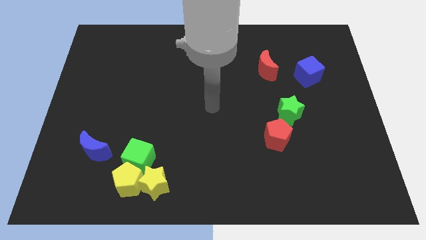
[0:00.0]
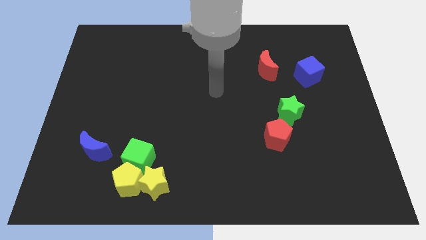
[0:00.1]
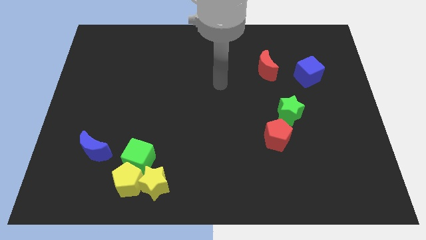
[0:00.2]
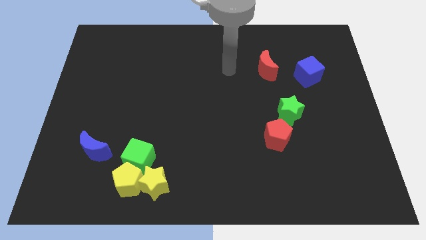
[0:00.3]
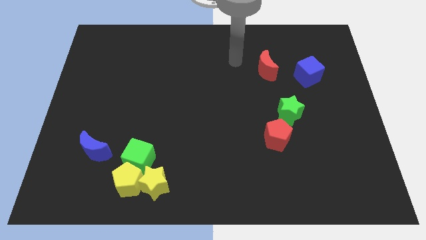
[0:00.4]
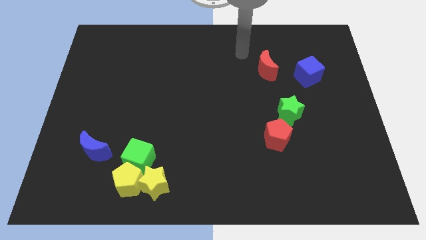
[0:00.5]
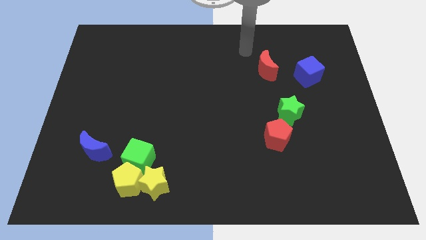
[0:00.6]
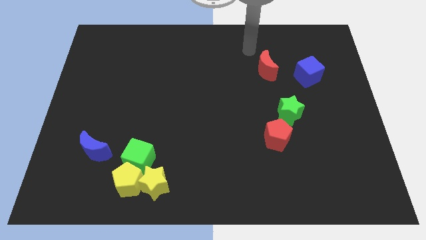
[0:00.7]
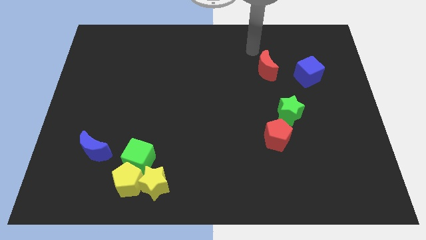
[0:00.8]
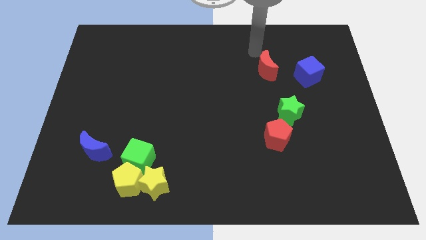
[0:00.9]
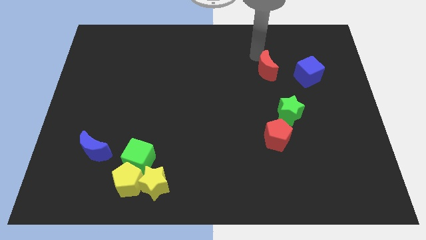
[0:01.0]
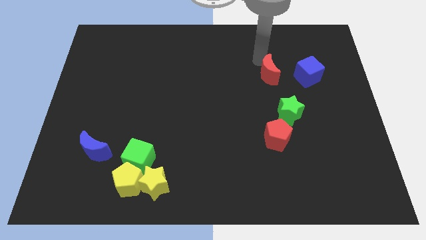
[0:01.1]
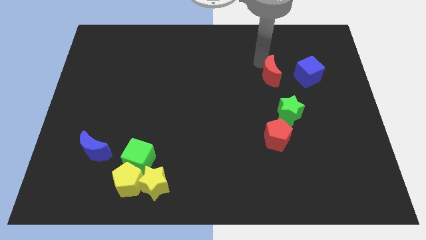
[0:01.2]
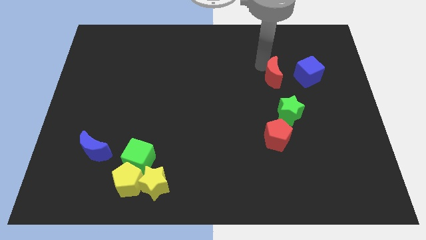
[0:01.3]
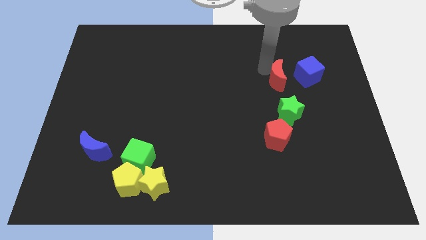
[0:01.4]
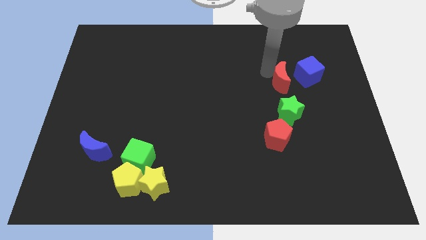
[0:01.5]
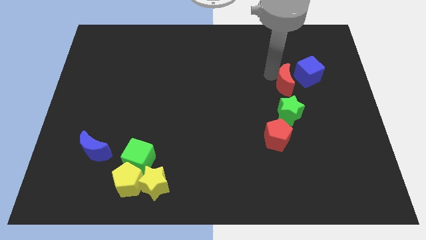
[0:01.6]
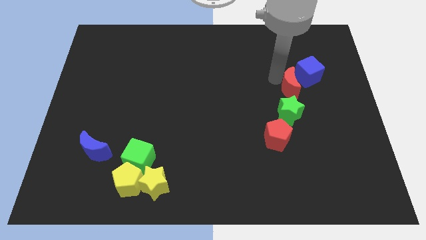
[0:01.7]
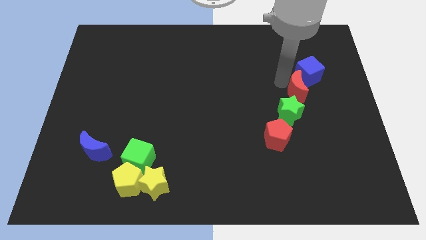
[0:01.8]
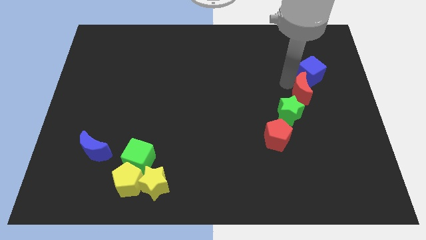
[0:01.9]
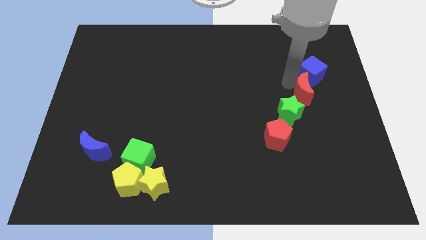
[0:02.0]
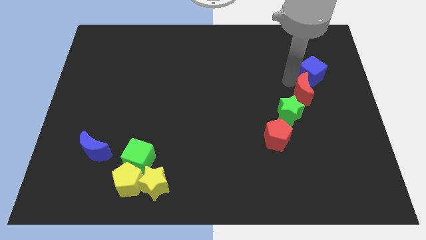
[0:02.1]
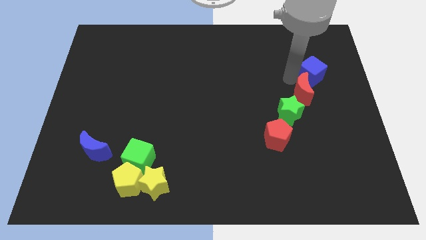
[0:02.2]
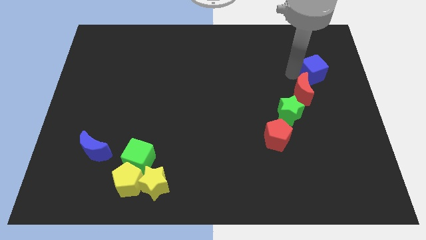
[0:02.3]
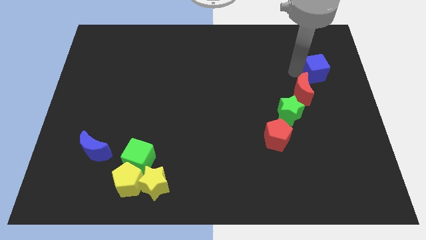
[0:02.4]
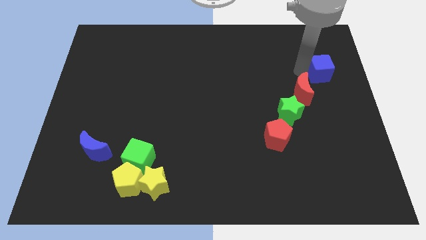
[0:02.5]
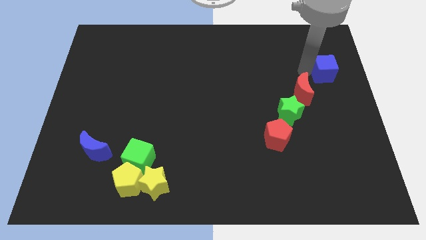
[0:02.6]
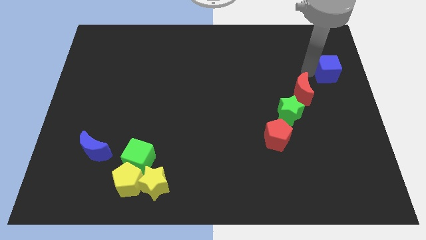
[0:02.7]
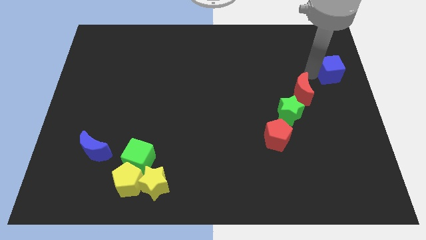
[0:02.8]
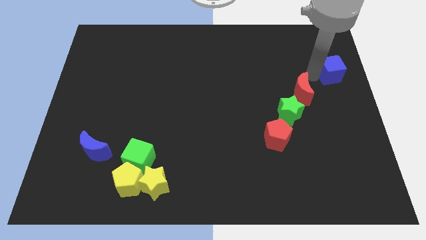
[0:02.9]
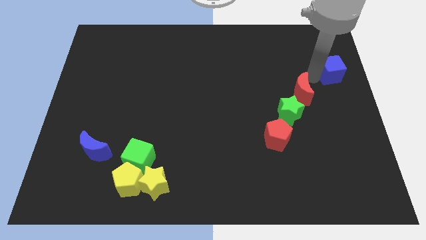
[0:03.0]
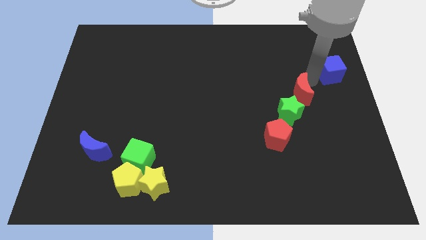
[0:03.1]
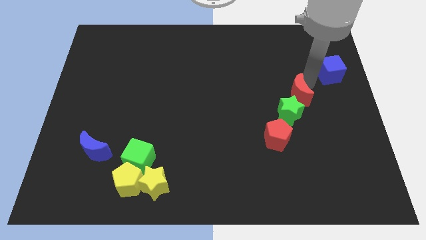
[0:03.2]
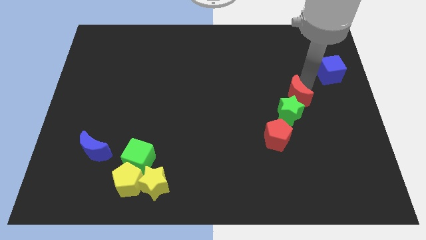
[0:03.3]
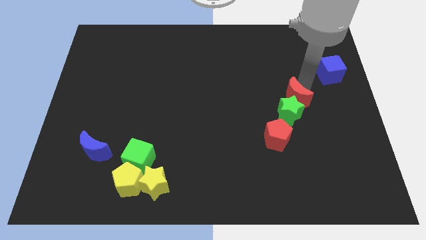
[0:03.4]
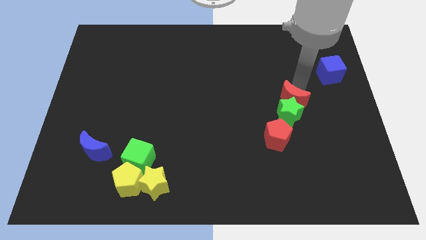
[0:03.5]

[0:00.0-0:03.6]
slide the red moon towards the green star

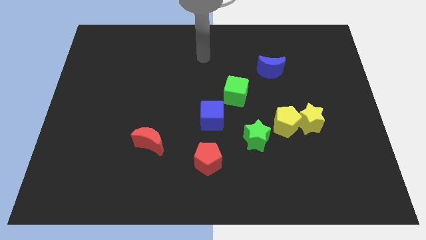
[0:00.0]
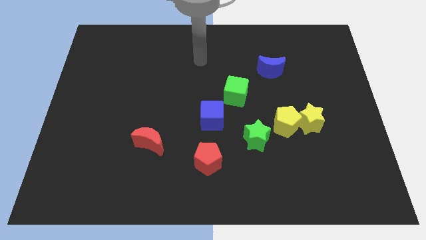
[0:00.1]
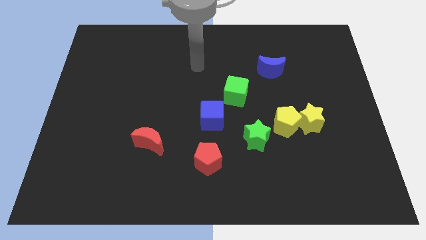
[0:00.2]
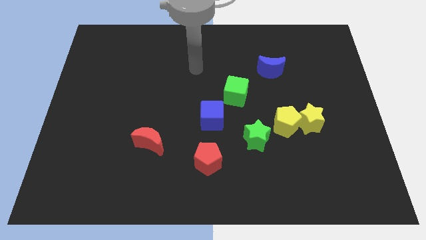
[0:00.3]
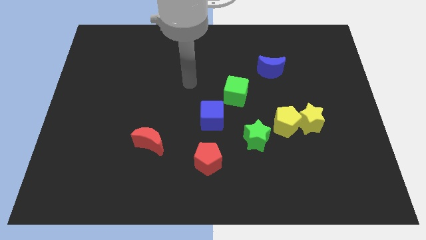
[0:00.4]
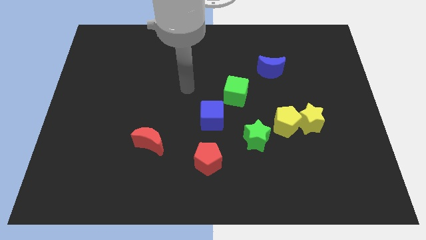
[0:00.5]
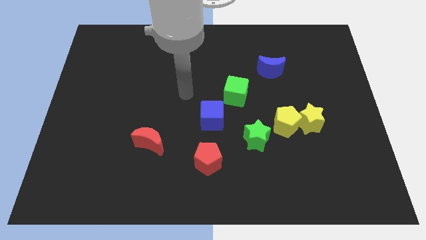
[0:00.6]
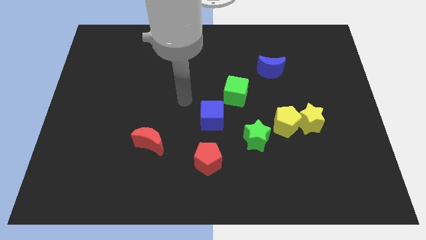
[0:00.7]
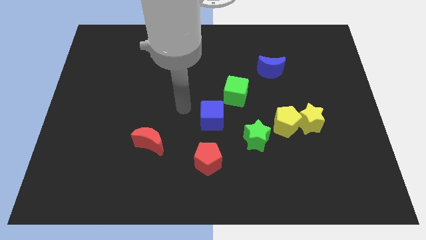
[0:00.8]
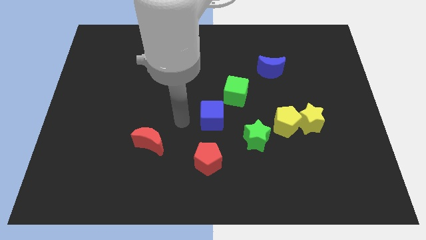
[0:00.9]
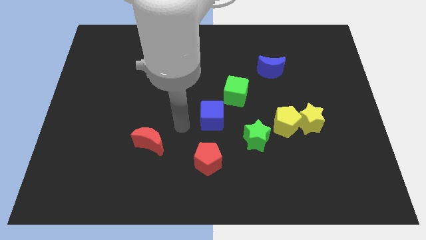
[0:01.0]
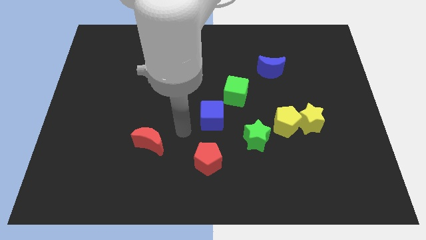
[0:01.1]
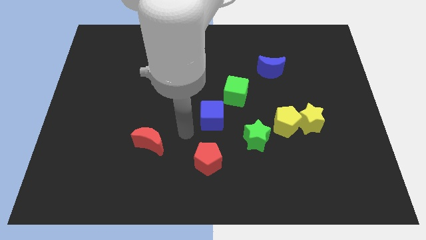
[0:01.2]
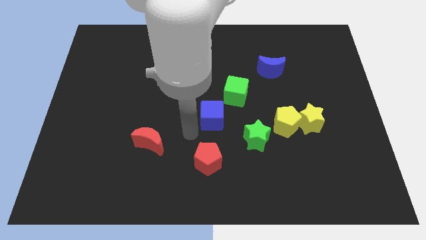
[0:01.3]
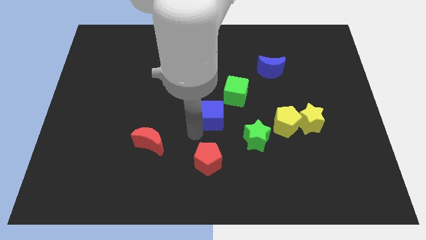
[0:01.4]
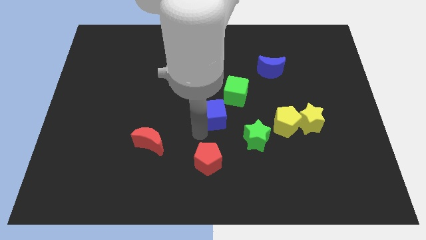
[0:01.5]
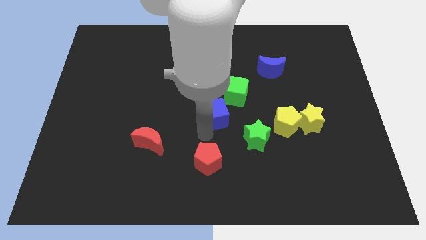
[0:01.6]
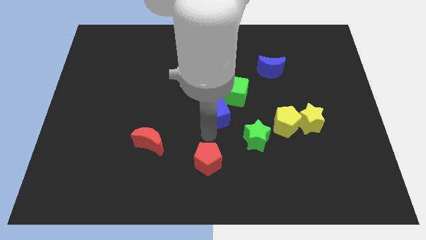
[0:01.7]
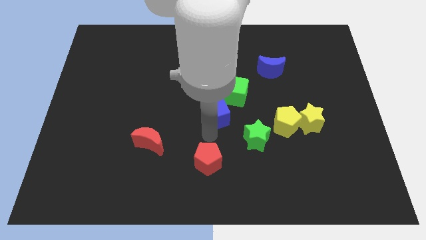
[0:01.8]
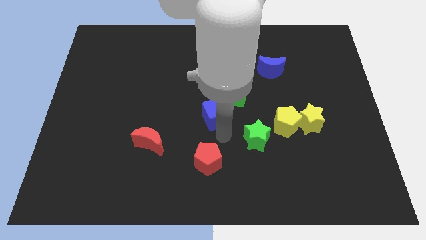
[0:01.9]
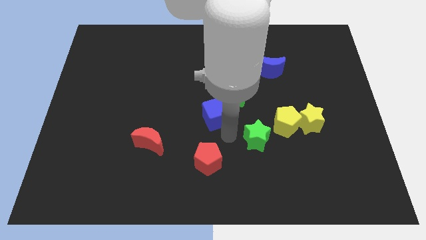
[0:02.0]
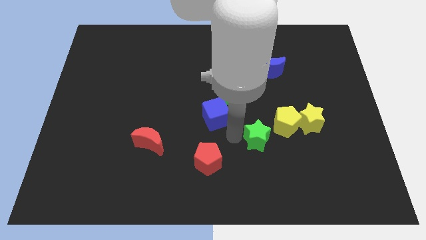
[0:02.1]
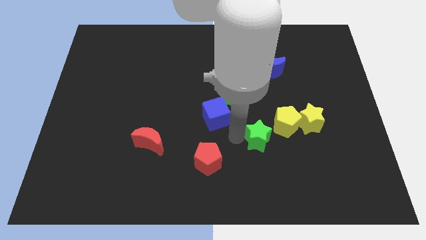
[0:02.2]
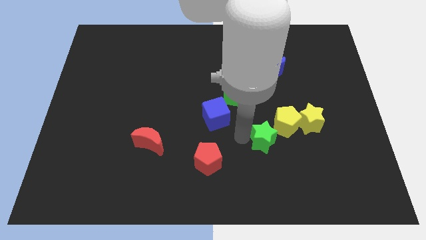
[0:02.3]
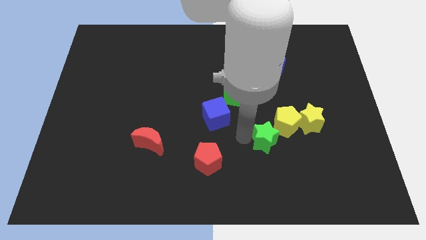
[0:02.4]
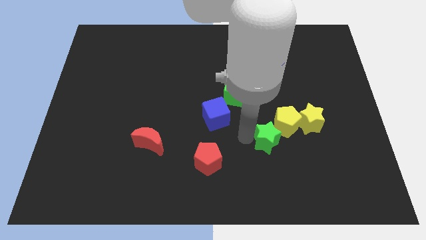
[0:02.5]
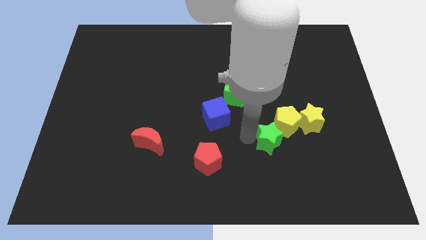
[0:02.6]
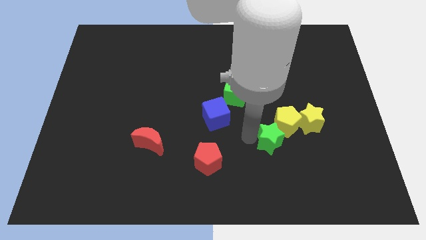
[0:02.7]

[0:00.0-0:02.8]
push the green star close to the yellow pentagon

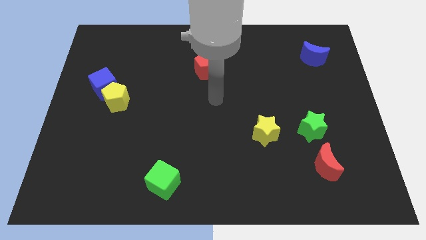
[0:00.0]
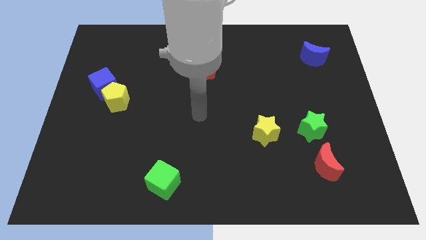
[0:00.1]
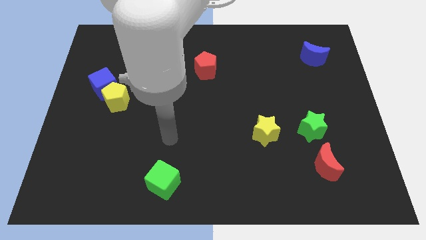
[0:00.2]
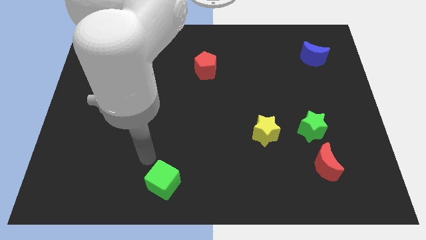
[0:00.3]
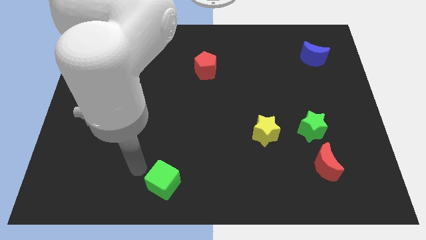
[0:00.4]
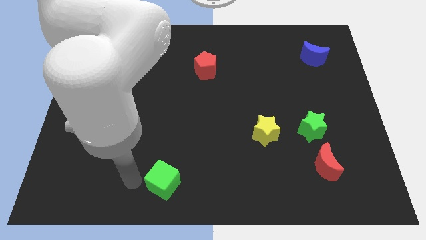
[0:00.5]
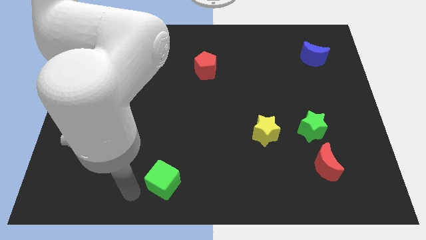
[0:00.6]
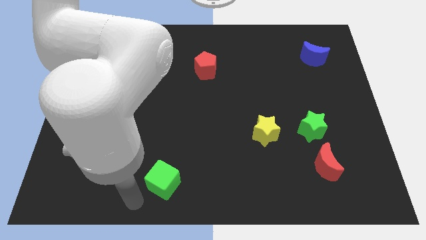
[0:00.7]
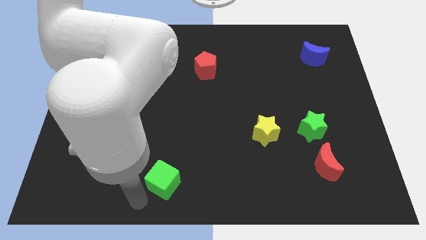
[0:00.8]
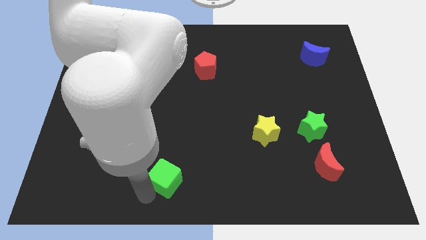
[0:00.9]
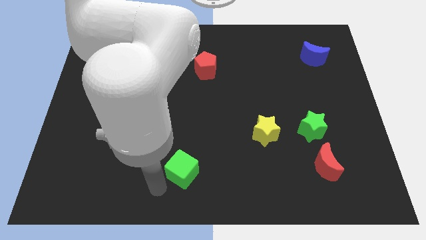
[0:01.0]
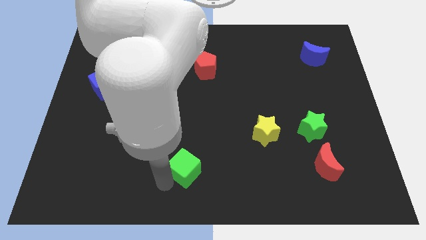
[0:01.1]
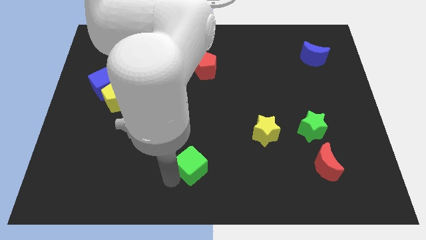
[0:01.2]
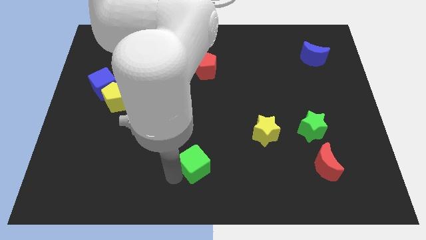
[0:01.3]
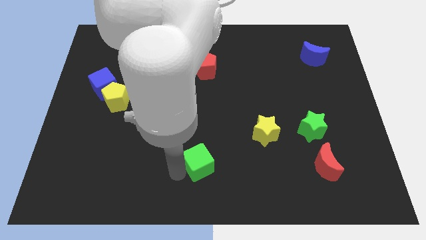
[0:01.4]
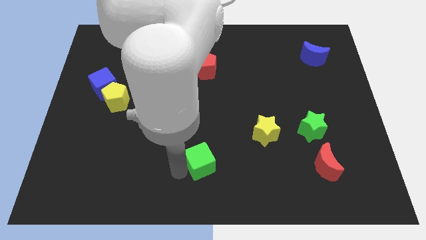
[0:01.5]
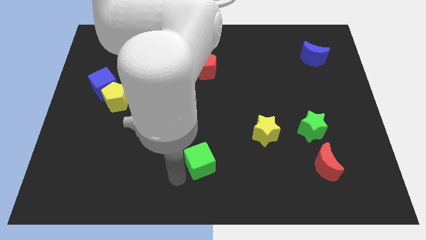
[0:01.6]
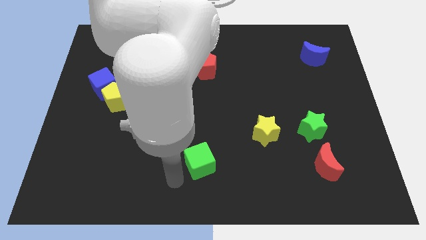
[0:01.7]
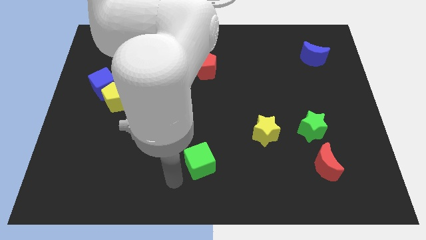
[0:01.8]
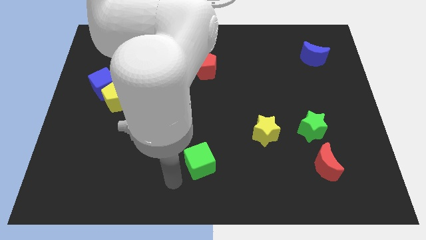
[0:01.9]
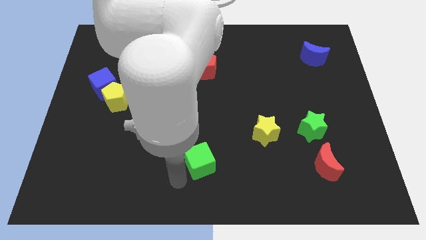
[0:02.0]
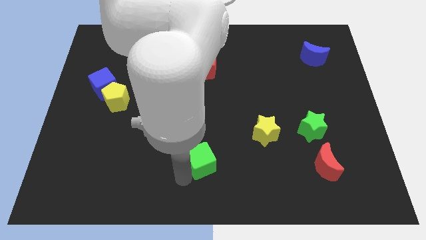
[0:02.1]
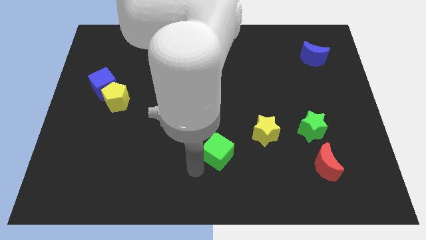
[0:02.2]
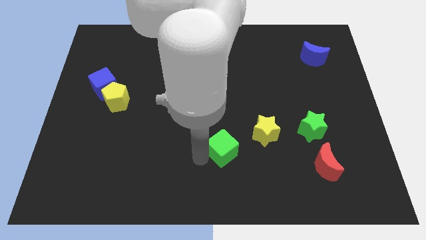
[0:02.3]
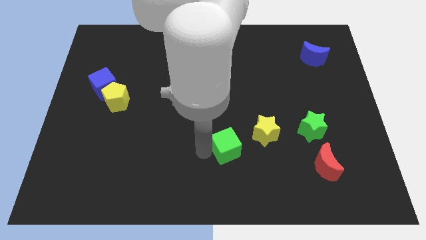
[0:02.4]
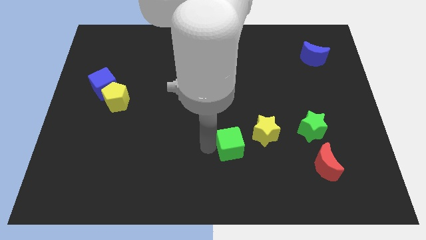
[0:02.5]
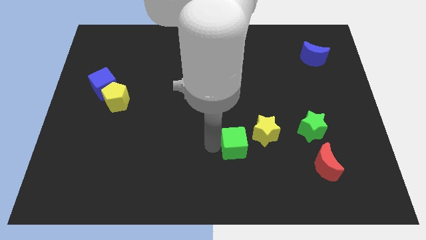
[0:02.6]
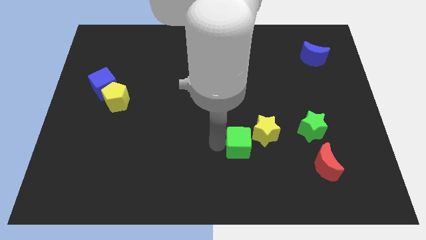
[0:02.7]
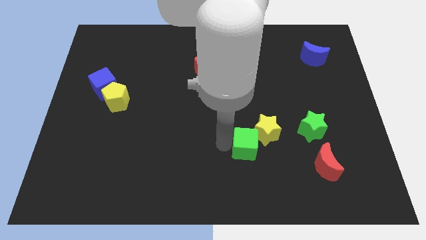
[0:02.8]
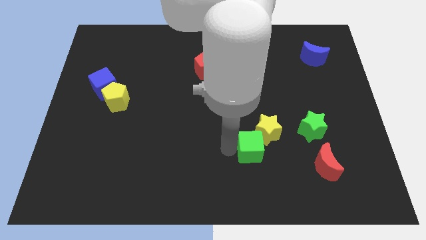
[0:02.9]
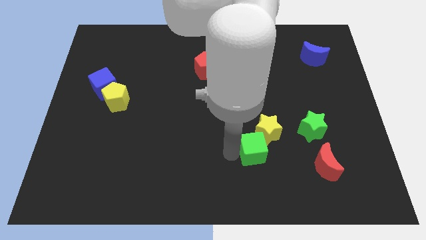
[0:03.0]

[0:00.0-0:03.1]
move the green cube to the yellow star
